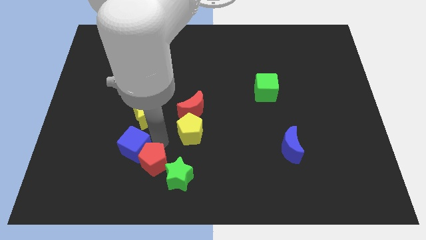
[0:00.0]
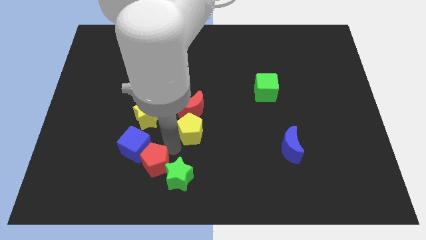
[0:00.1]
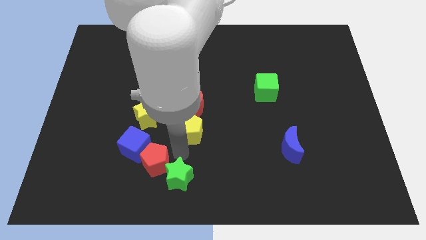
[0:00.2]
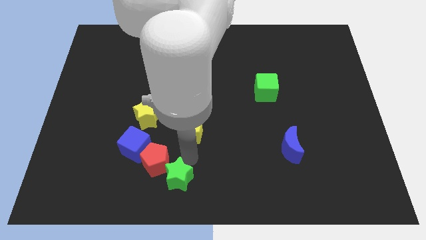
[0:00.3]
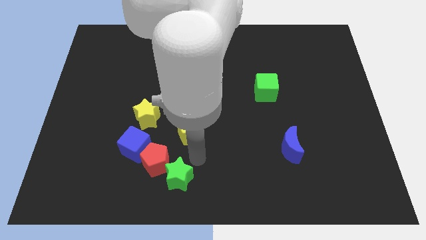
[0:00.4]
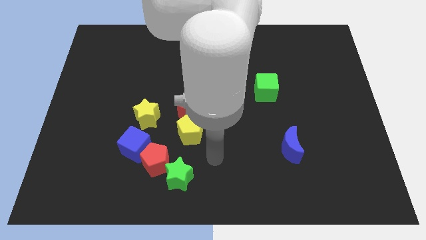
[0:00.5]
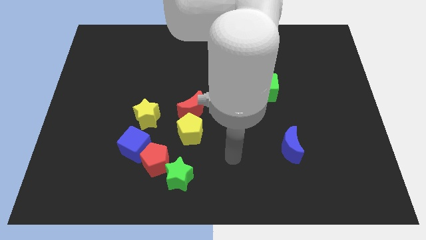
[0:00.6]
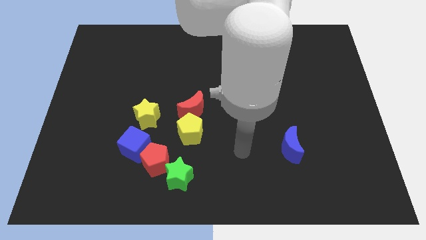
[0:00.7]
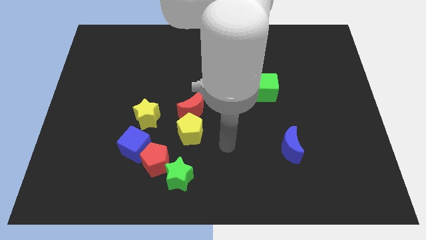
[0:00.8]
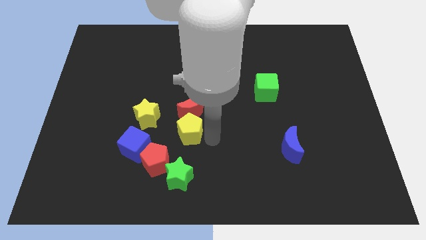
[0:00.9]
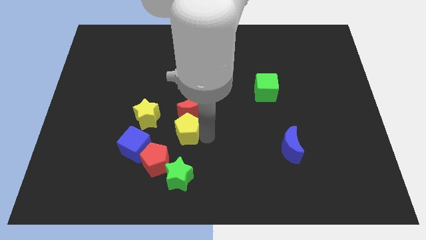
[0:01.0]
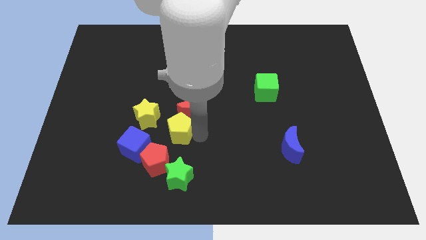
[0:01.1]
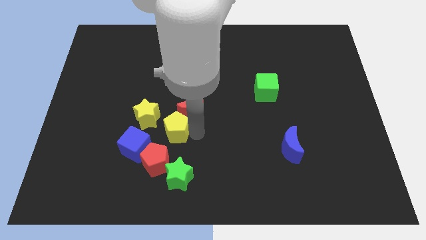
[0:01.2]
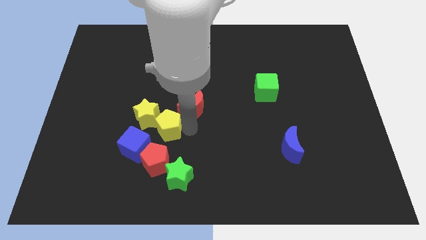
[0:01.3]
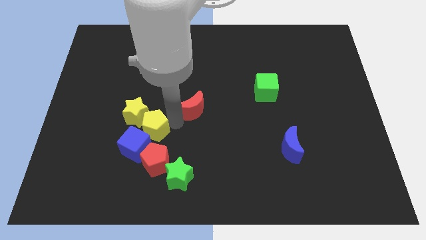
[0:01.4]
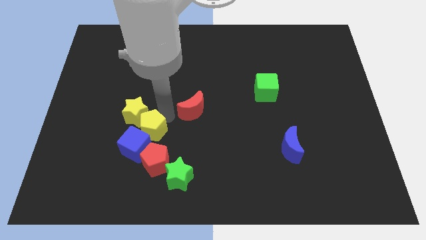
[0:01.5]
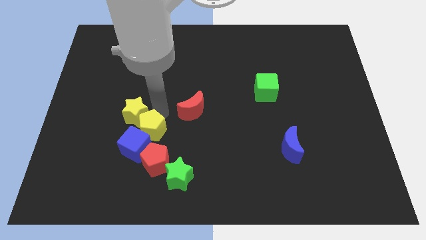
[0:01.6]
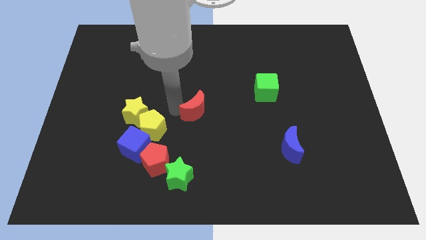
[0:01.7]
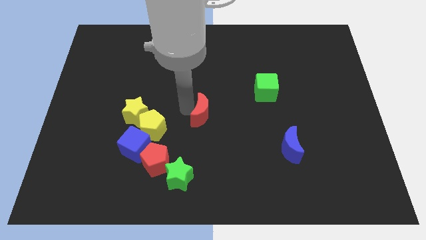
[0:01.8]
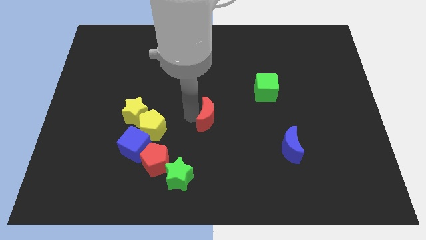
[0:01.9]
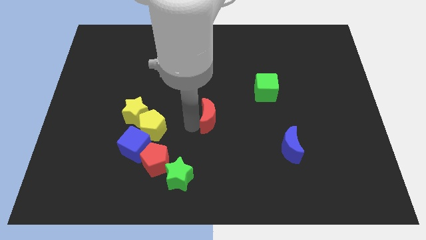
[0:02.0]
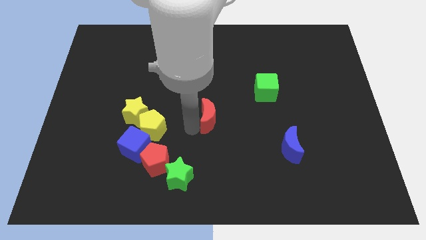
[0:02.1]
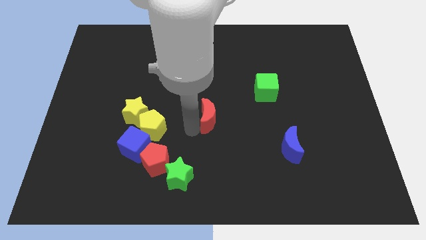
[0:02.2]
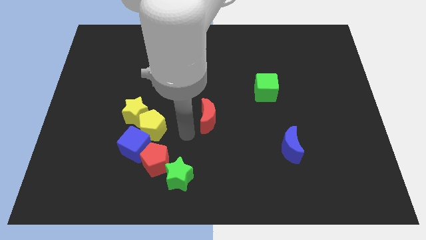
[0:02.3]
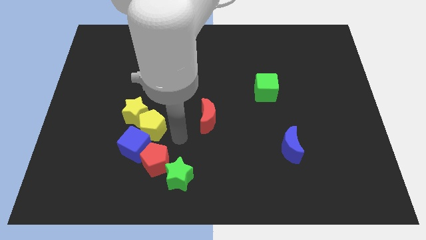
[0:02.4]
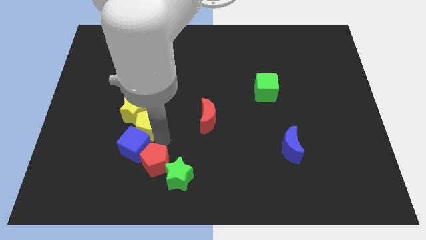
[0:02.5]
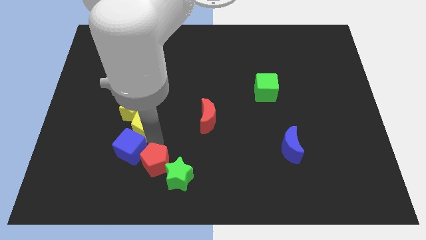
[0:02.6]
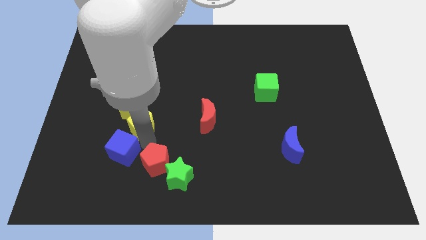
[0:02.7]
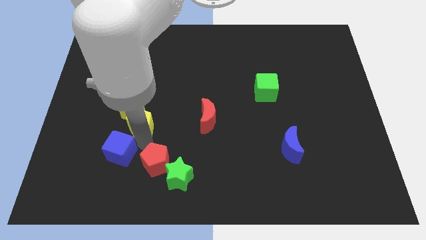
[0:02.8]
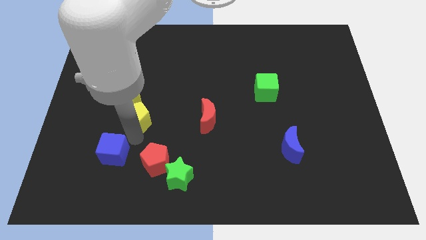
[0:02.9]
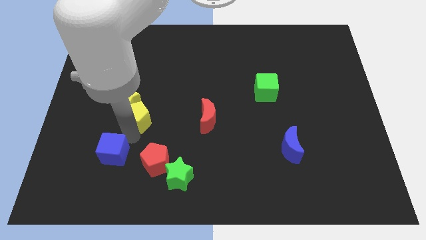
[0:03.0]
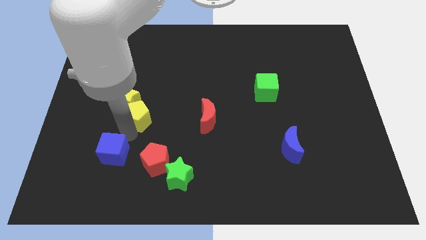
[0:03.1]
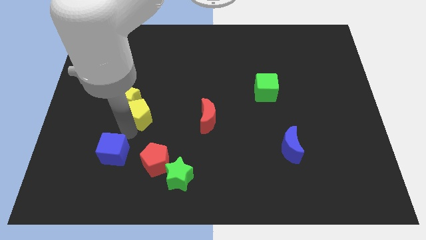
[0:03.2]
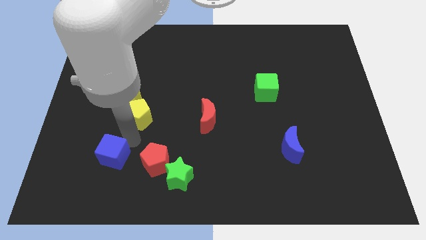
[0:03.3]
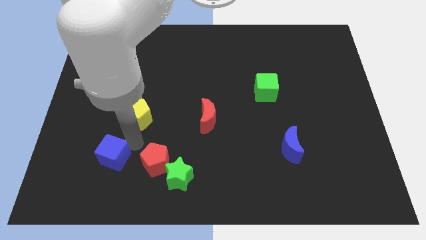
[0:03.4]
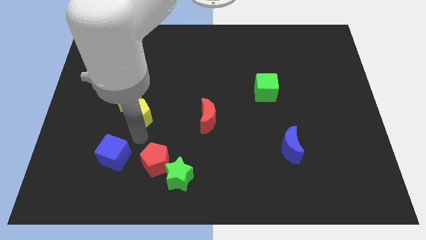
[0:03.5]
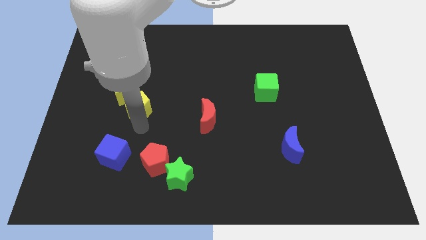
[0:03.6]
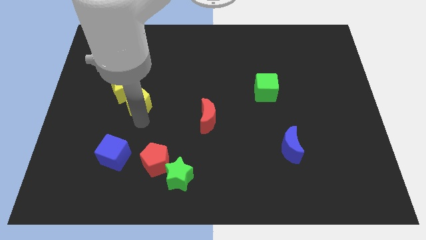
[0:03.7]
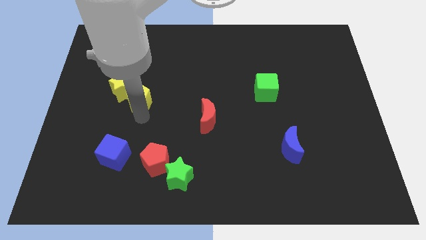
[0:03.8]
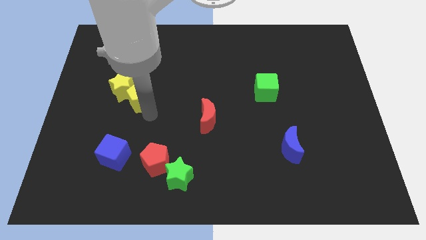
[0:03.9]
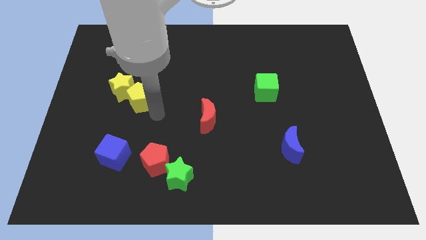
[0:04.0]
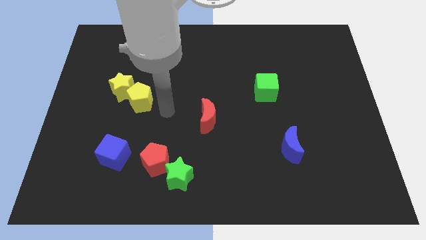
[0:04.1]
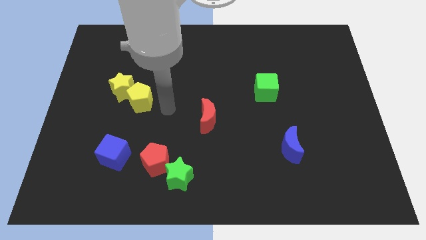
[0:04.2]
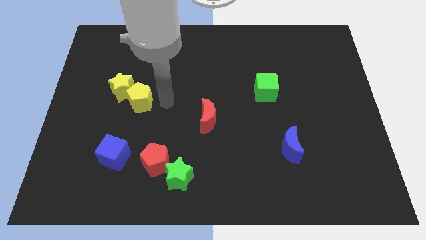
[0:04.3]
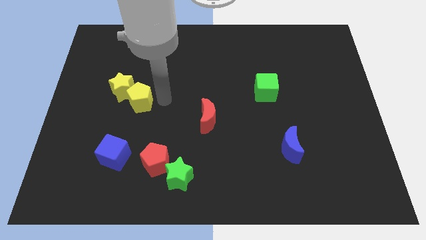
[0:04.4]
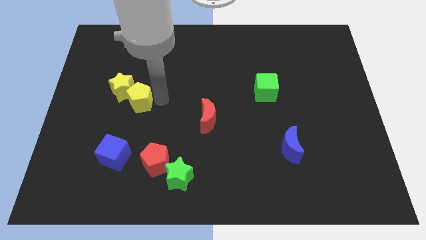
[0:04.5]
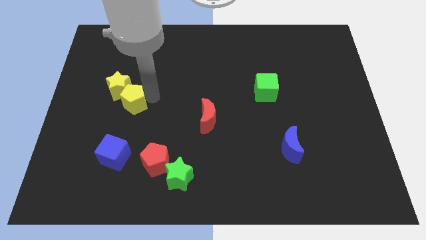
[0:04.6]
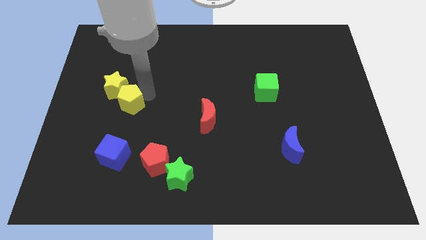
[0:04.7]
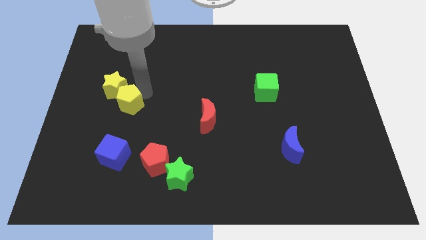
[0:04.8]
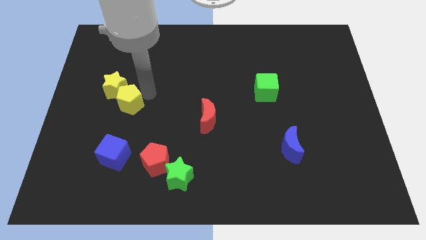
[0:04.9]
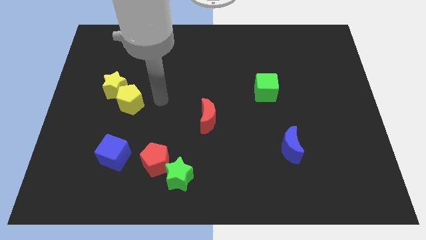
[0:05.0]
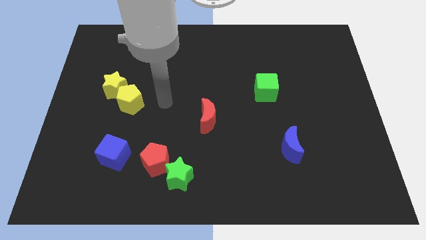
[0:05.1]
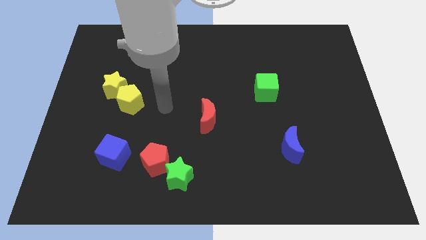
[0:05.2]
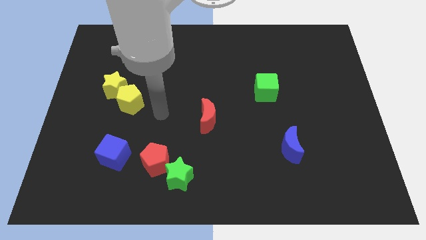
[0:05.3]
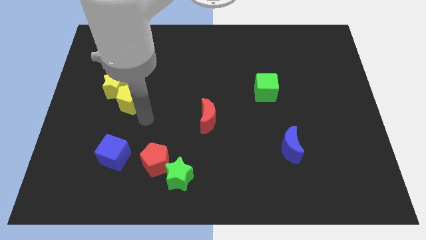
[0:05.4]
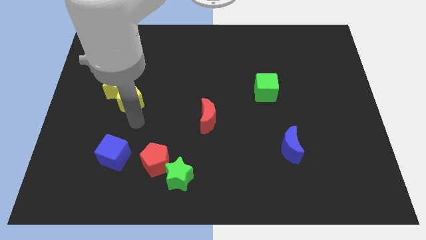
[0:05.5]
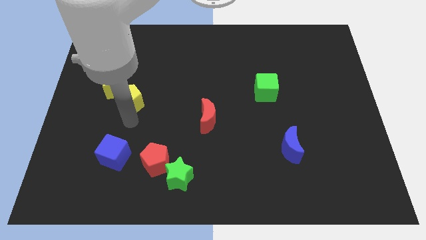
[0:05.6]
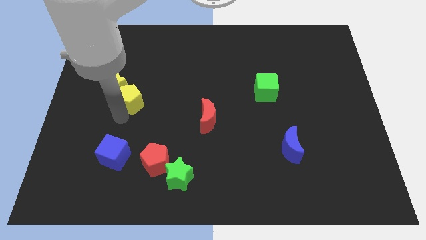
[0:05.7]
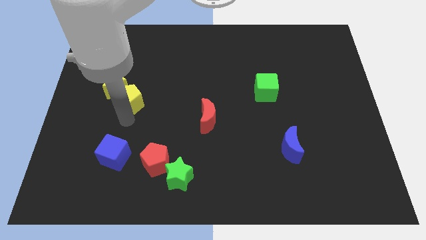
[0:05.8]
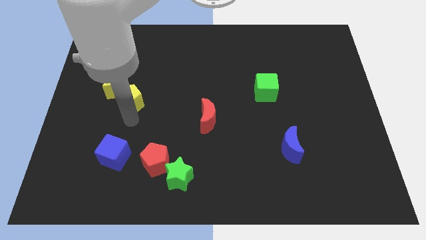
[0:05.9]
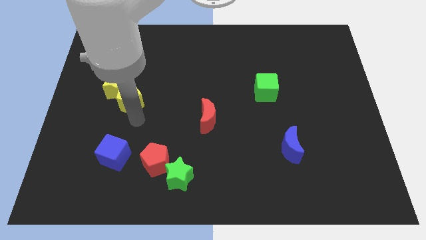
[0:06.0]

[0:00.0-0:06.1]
move the yellow pentagon and yellow star slightly upwards

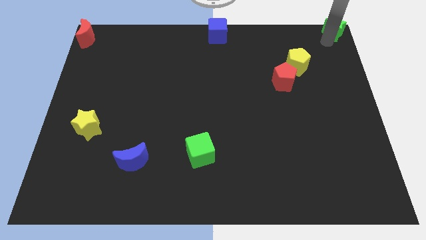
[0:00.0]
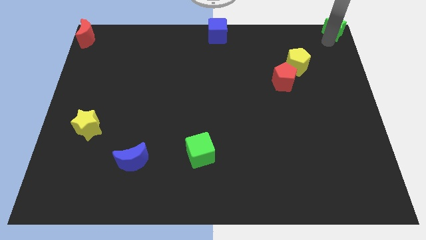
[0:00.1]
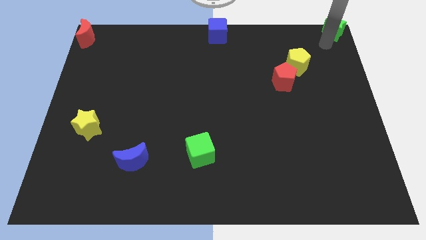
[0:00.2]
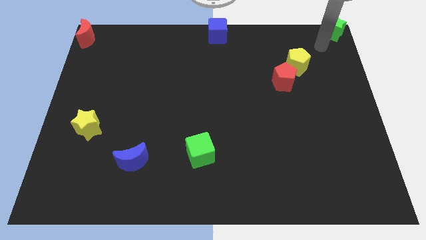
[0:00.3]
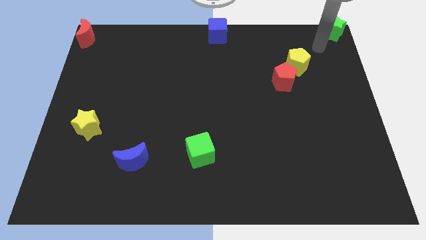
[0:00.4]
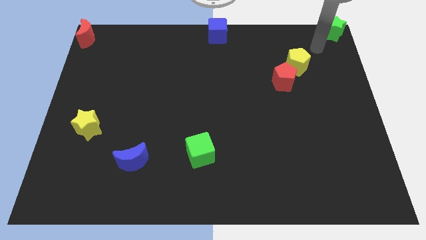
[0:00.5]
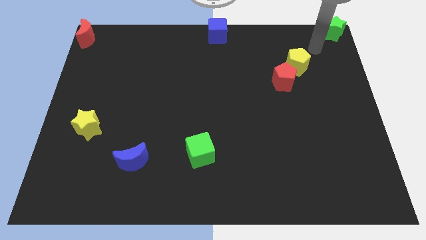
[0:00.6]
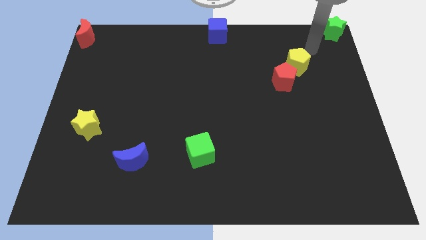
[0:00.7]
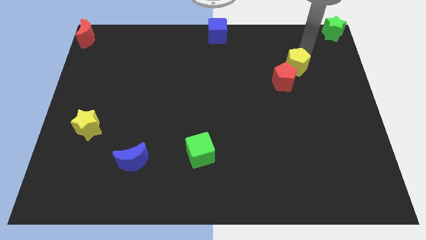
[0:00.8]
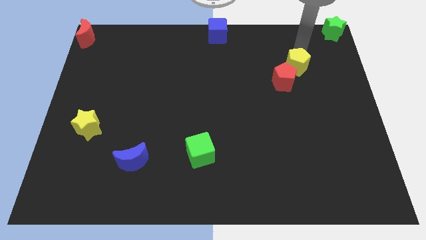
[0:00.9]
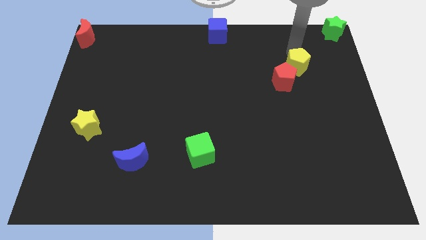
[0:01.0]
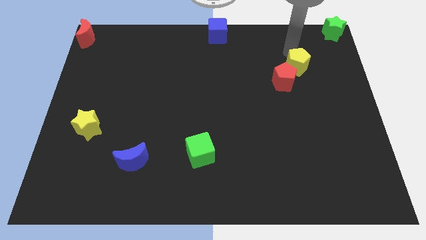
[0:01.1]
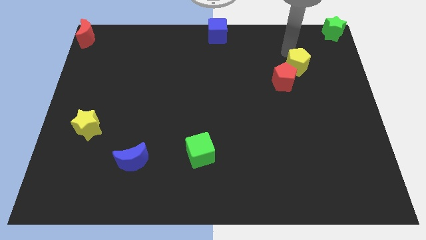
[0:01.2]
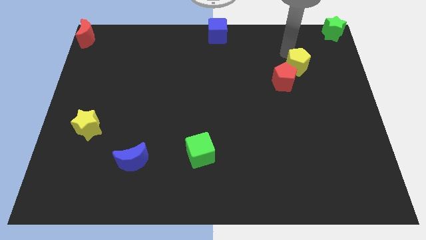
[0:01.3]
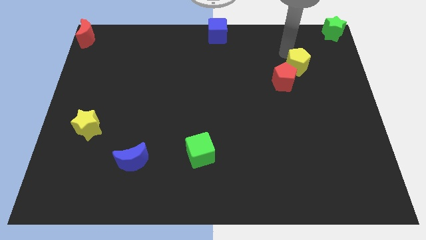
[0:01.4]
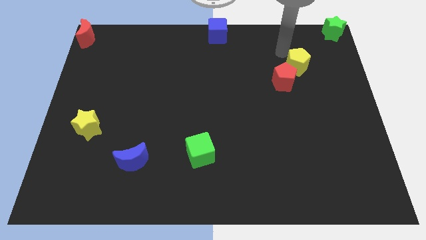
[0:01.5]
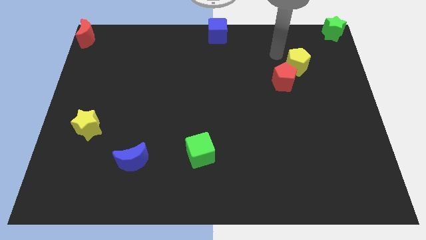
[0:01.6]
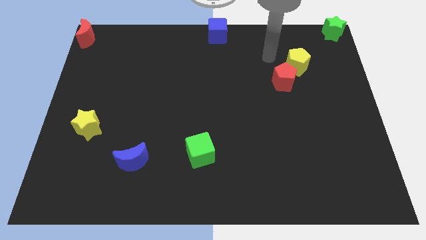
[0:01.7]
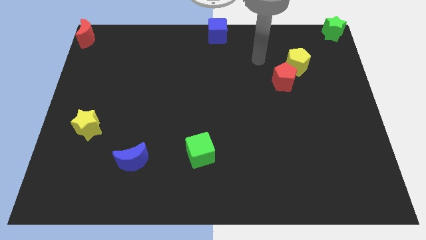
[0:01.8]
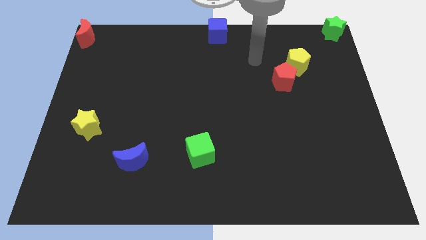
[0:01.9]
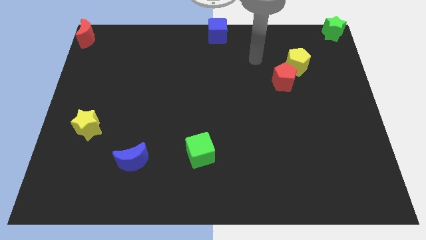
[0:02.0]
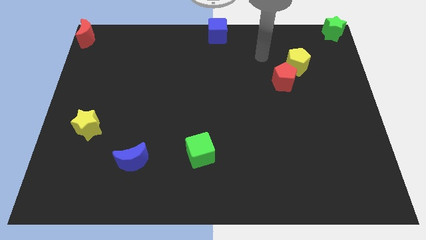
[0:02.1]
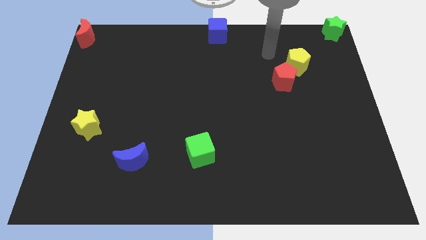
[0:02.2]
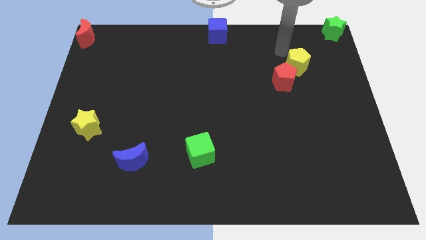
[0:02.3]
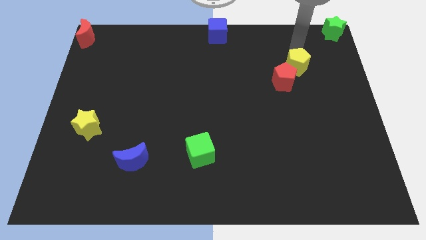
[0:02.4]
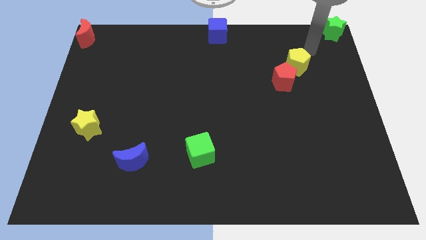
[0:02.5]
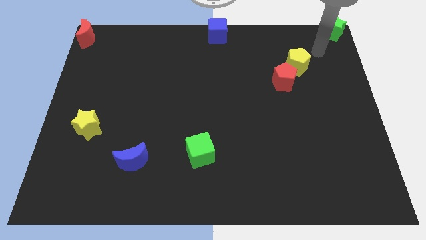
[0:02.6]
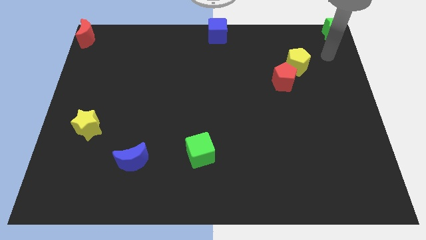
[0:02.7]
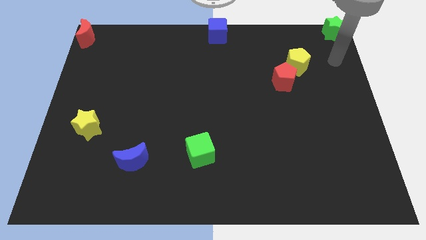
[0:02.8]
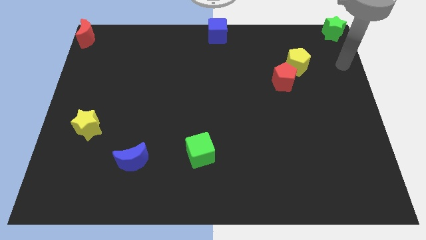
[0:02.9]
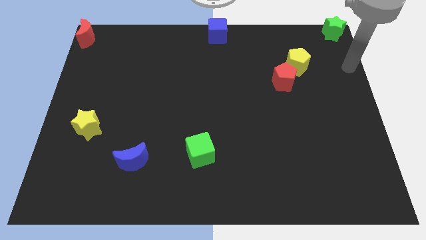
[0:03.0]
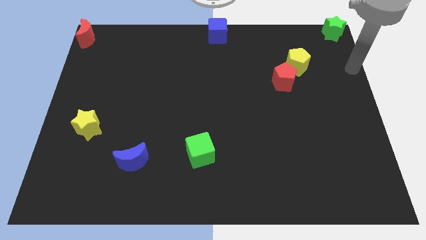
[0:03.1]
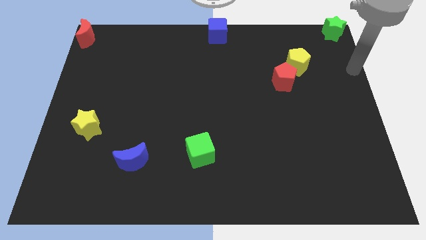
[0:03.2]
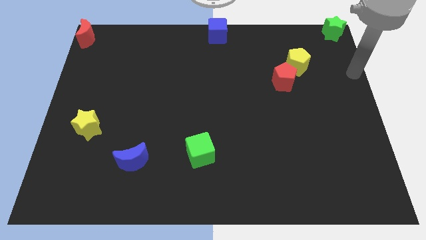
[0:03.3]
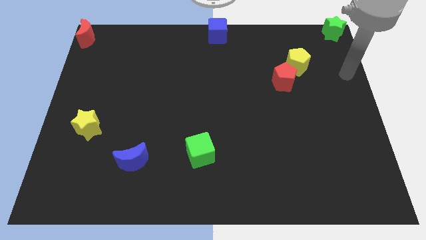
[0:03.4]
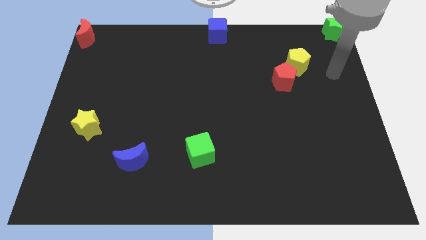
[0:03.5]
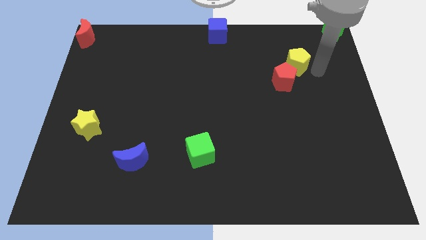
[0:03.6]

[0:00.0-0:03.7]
move your arm and point below green star
